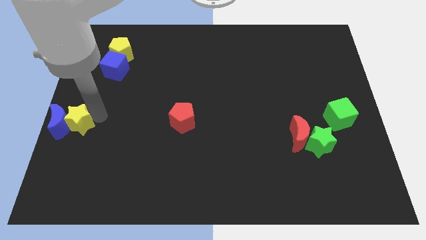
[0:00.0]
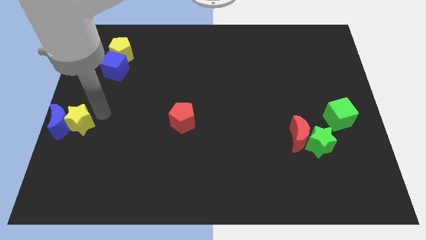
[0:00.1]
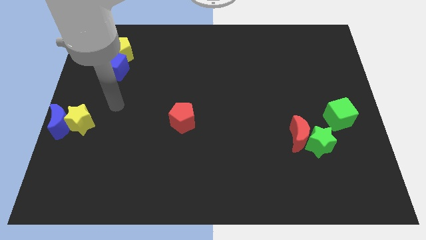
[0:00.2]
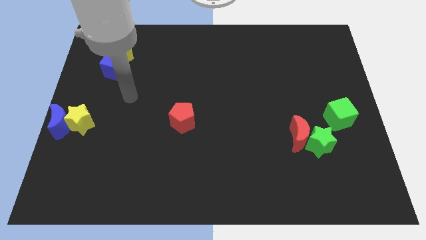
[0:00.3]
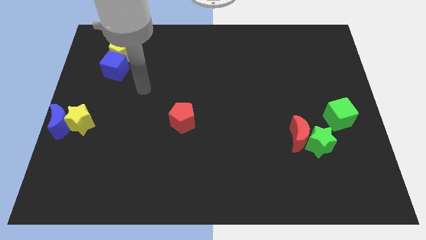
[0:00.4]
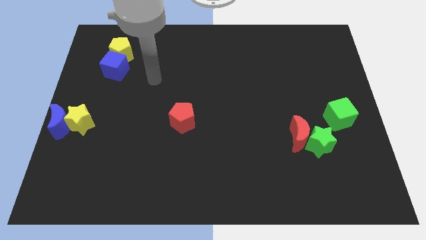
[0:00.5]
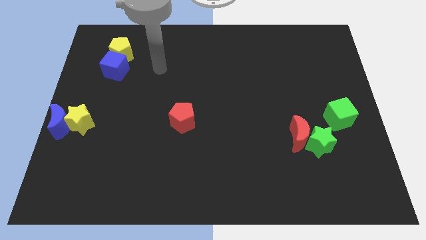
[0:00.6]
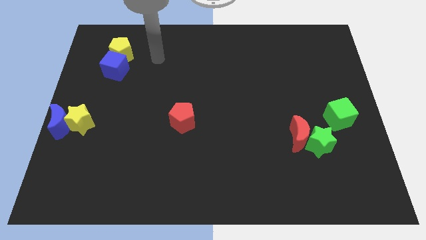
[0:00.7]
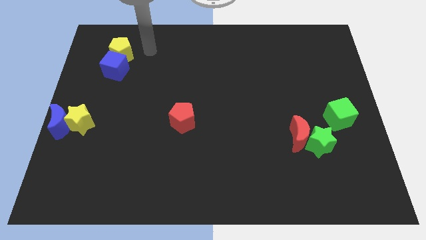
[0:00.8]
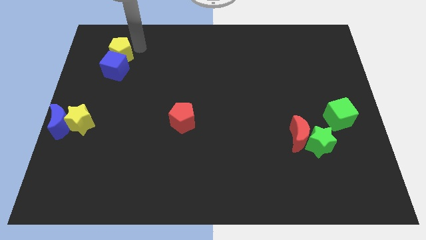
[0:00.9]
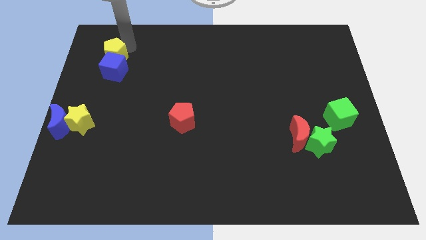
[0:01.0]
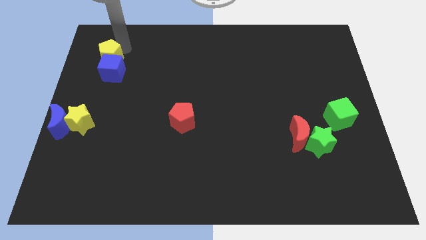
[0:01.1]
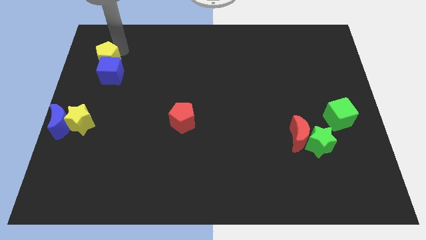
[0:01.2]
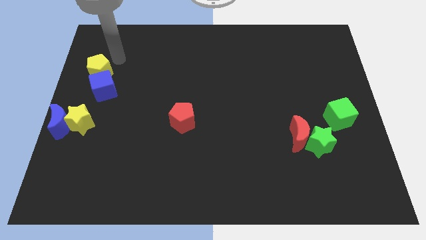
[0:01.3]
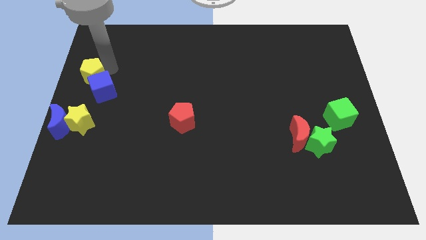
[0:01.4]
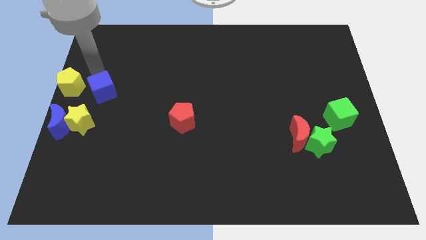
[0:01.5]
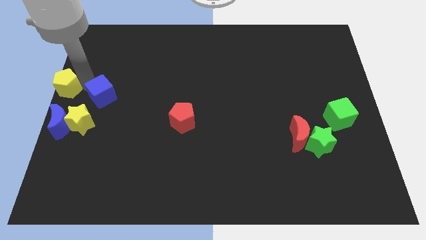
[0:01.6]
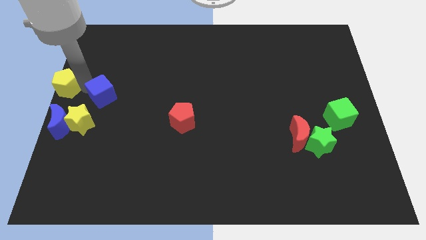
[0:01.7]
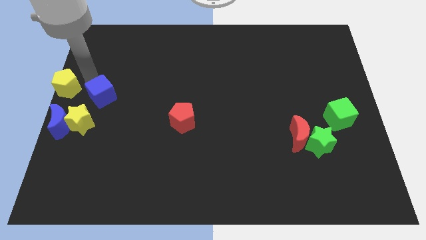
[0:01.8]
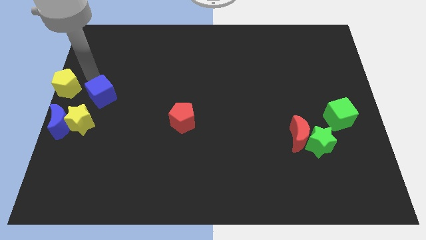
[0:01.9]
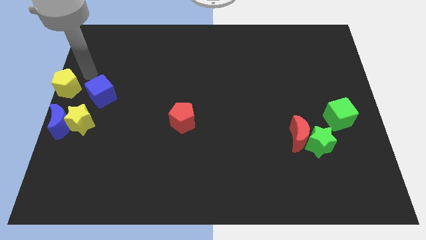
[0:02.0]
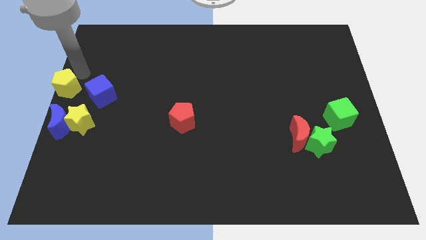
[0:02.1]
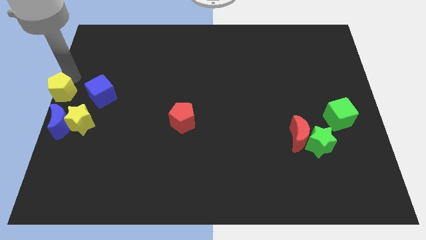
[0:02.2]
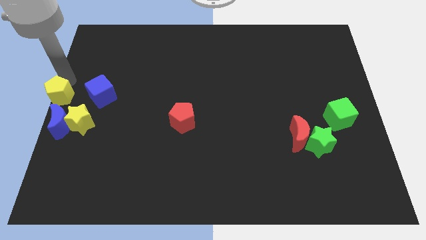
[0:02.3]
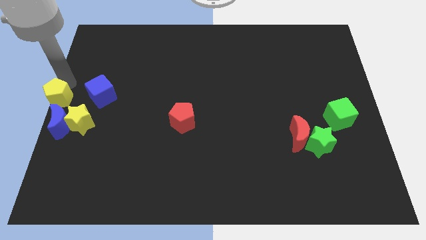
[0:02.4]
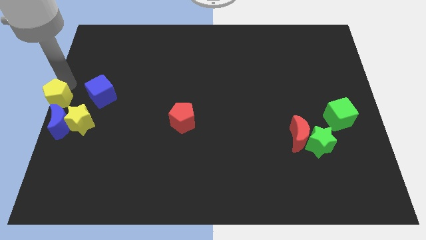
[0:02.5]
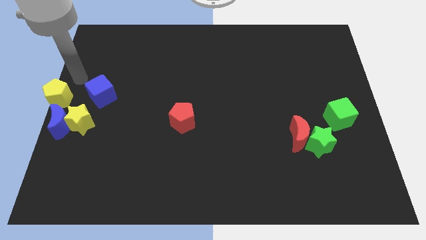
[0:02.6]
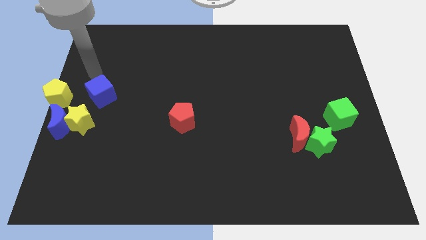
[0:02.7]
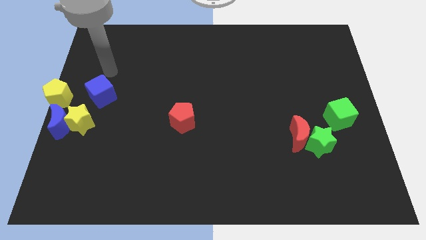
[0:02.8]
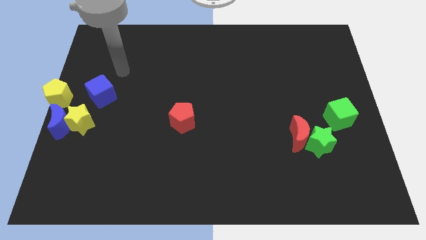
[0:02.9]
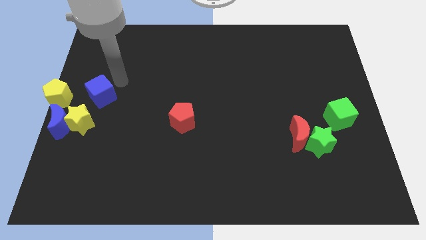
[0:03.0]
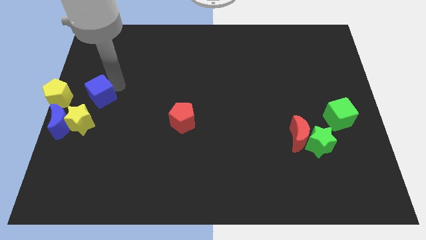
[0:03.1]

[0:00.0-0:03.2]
push yellow pentagon above the blue moon

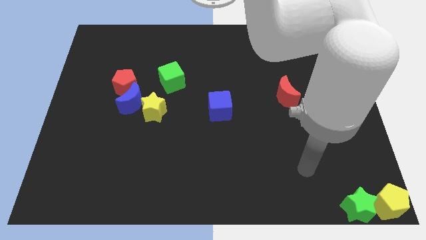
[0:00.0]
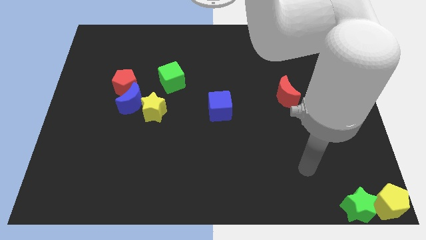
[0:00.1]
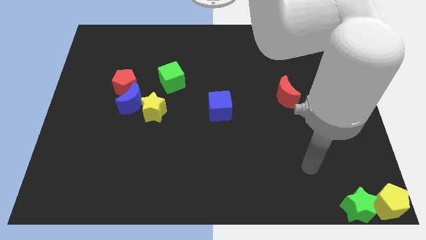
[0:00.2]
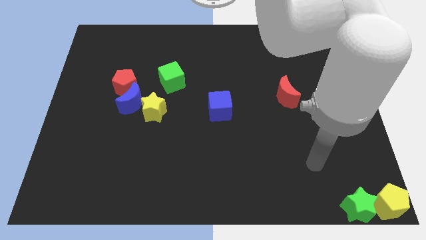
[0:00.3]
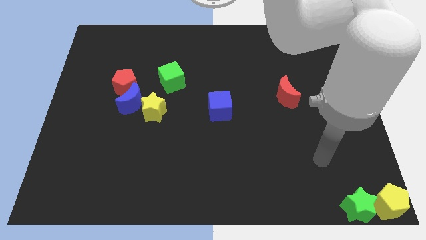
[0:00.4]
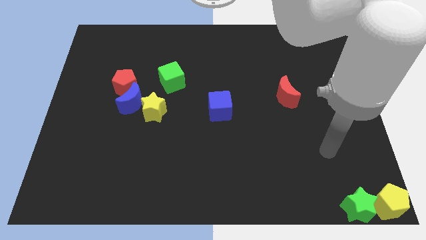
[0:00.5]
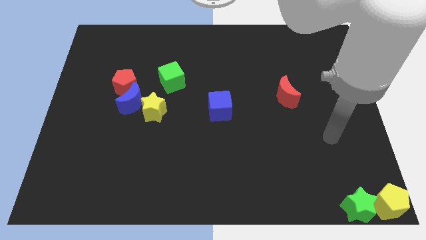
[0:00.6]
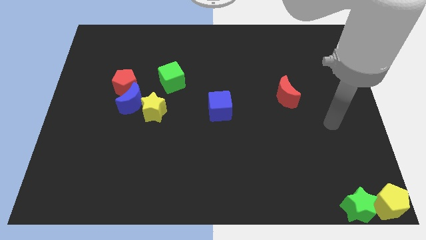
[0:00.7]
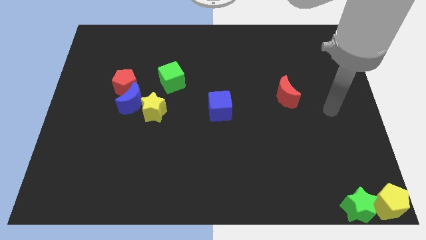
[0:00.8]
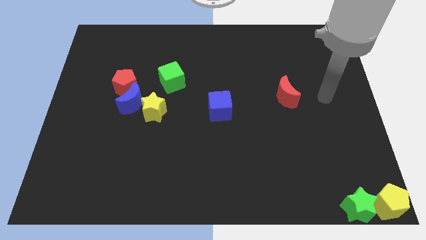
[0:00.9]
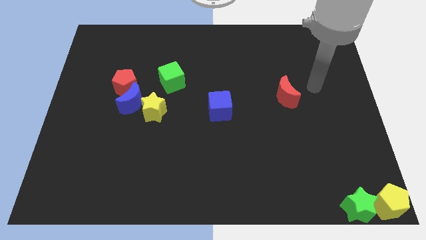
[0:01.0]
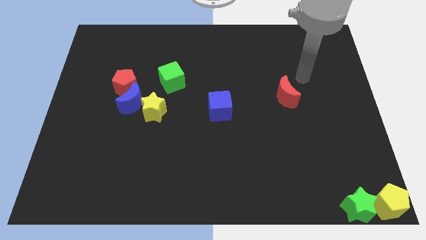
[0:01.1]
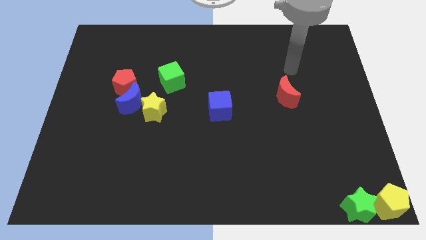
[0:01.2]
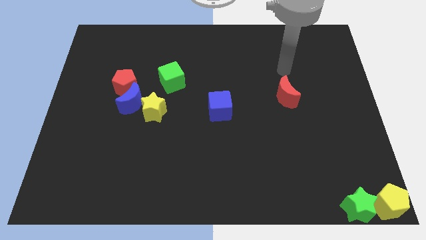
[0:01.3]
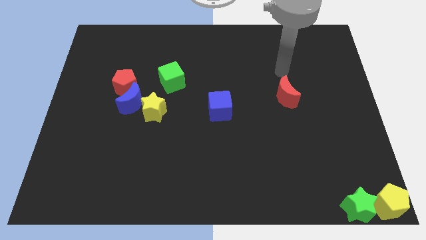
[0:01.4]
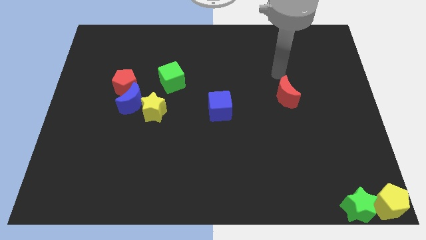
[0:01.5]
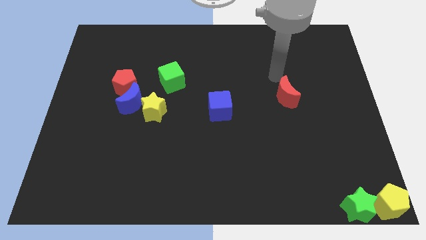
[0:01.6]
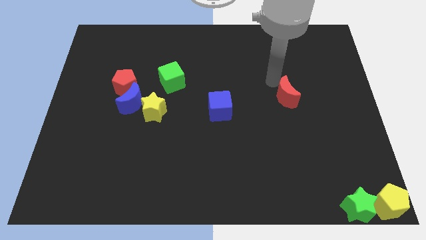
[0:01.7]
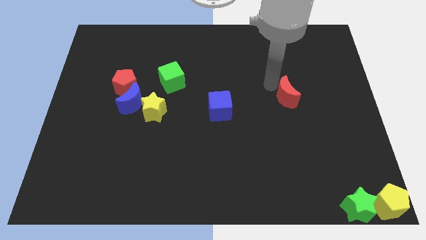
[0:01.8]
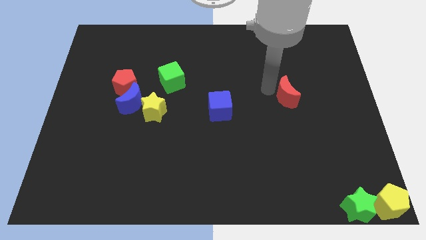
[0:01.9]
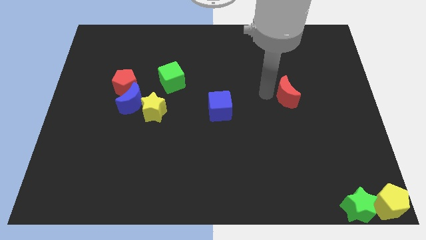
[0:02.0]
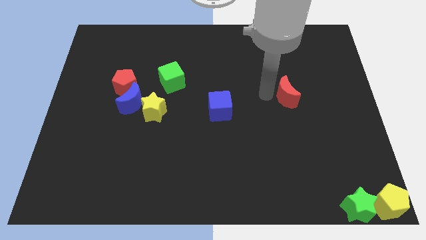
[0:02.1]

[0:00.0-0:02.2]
place your arm to the left of red moon

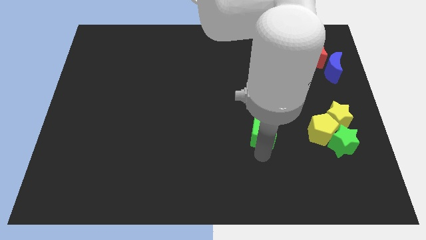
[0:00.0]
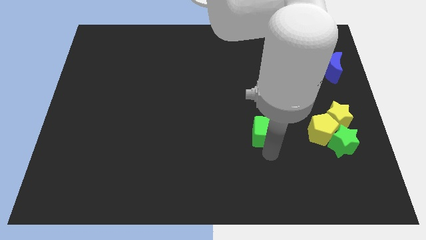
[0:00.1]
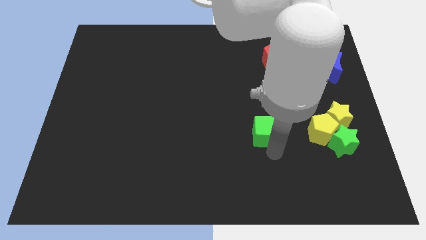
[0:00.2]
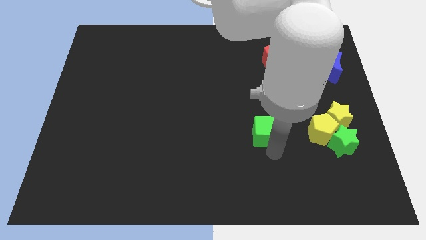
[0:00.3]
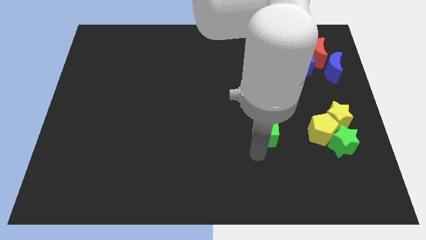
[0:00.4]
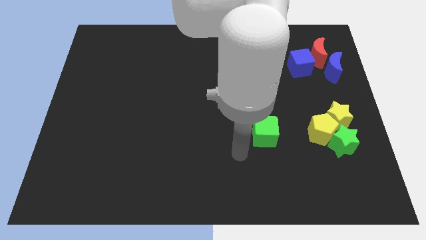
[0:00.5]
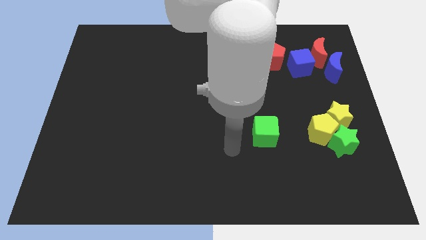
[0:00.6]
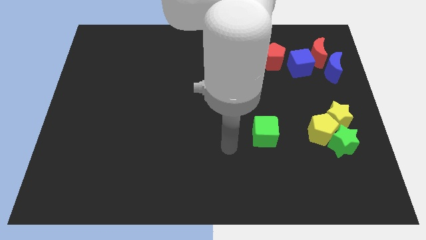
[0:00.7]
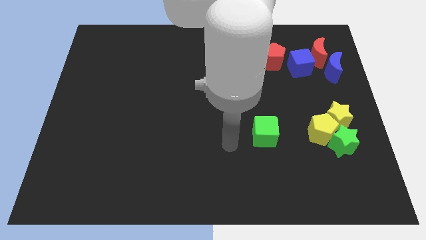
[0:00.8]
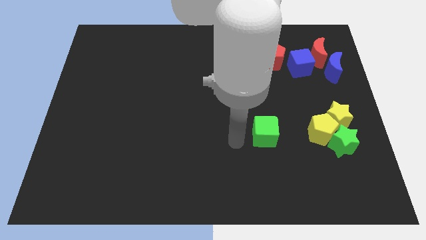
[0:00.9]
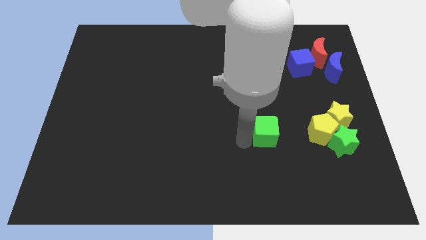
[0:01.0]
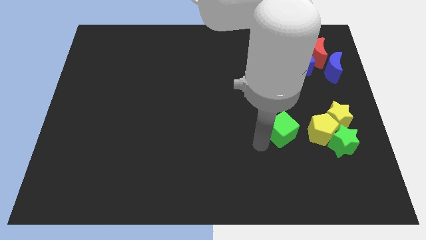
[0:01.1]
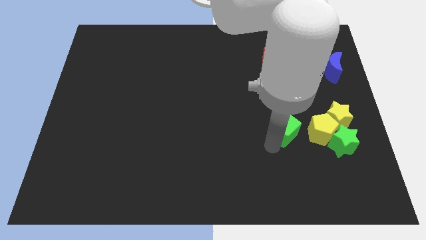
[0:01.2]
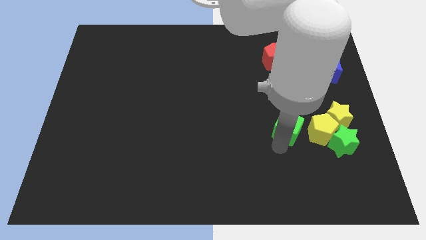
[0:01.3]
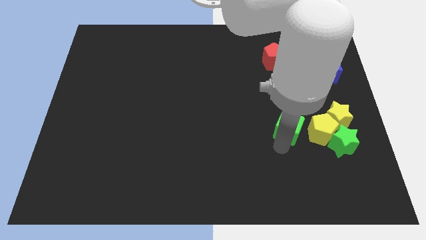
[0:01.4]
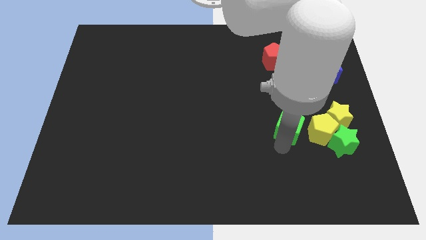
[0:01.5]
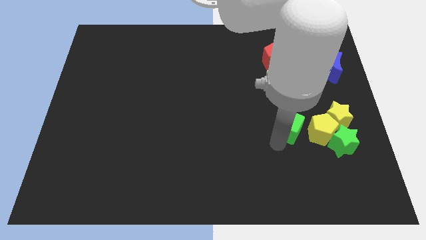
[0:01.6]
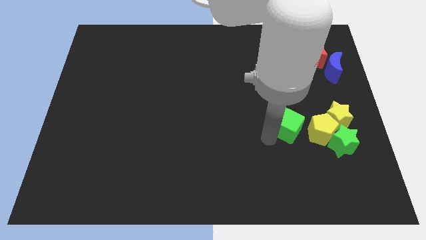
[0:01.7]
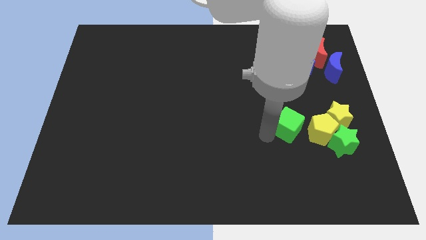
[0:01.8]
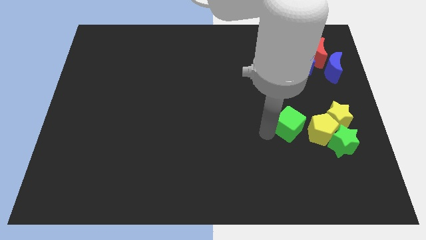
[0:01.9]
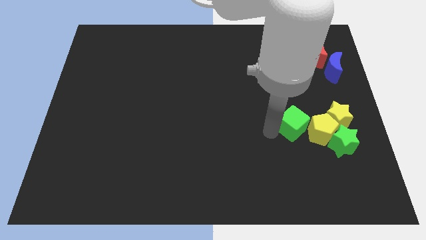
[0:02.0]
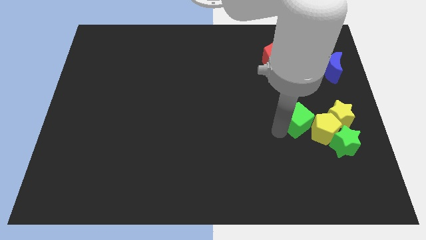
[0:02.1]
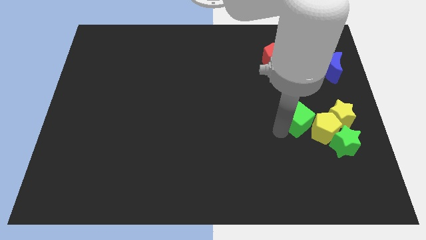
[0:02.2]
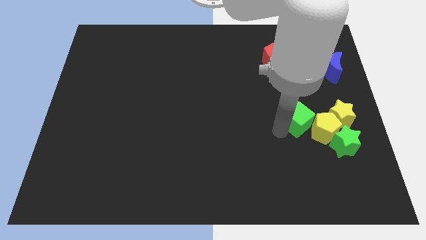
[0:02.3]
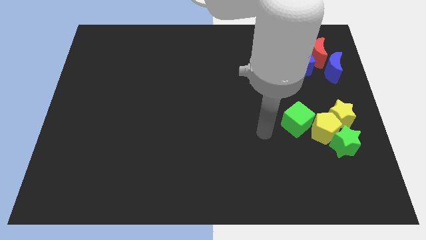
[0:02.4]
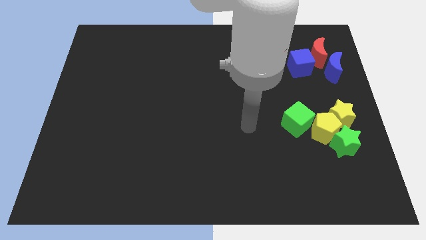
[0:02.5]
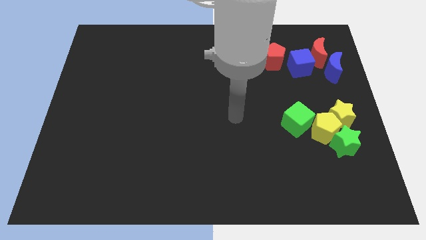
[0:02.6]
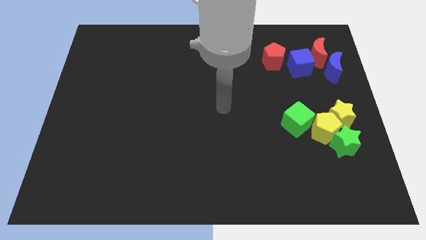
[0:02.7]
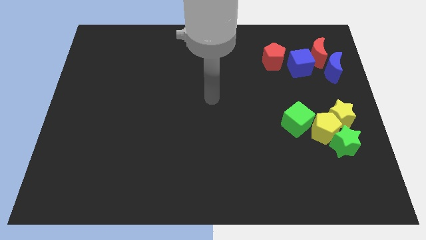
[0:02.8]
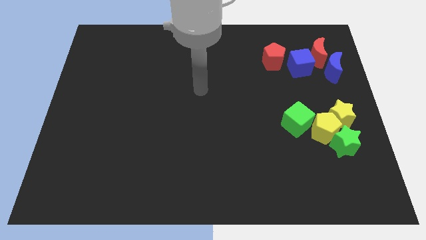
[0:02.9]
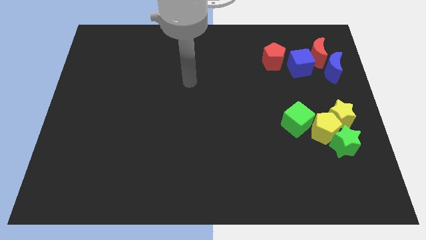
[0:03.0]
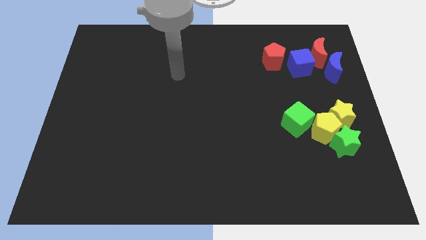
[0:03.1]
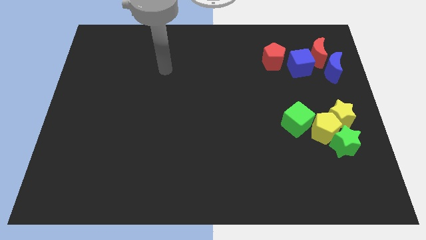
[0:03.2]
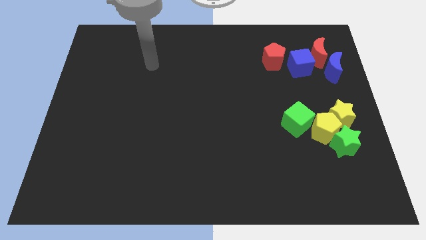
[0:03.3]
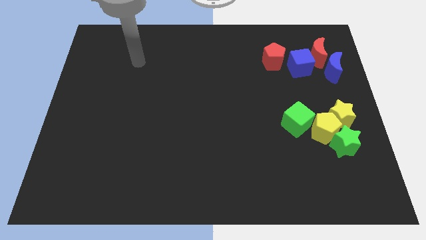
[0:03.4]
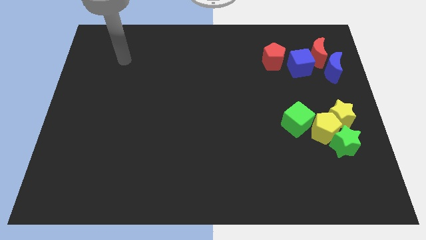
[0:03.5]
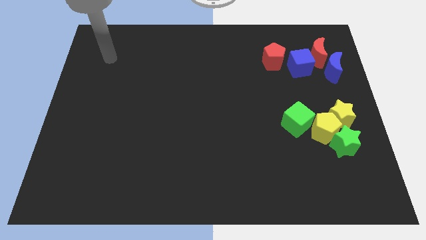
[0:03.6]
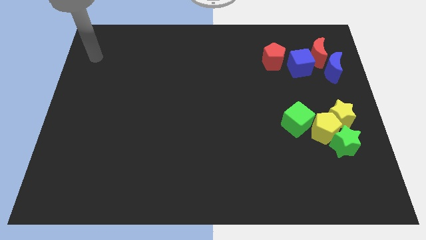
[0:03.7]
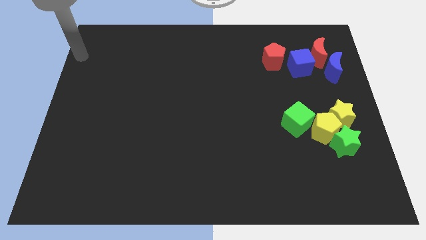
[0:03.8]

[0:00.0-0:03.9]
move green cube into the group of blocks
